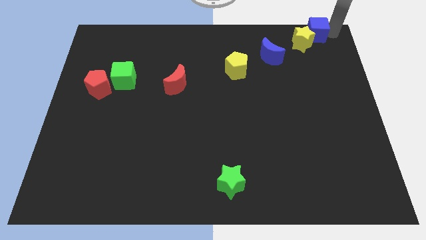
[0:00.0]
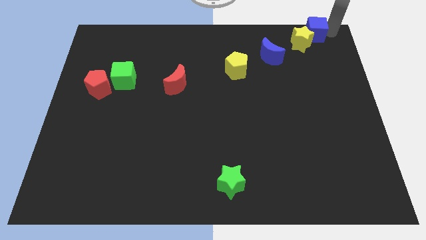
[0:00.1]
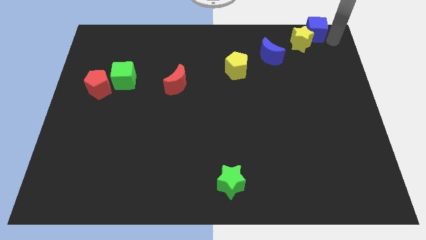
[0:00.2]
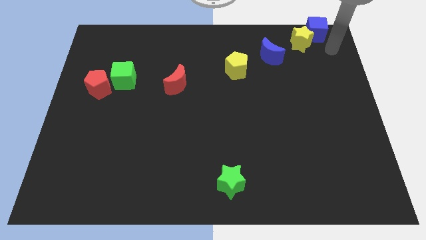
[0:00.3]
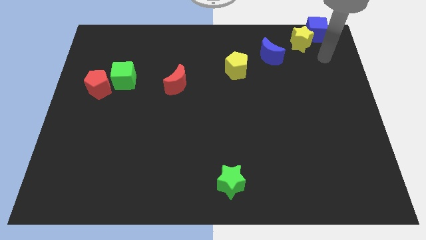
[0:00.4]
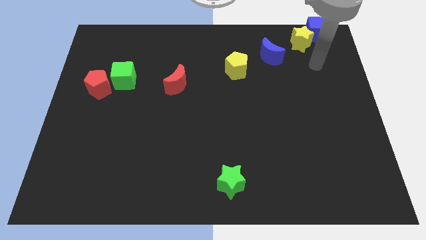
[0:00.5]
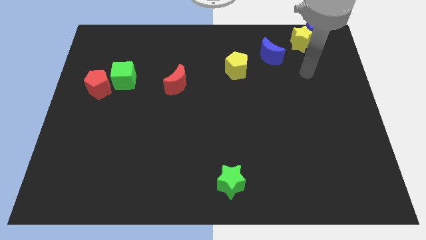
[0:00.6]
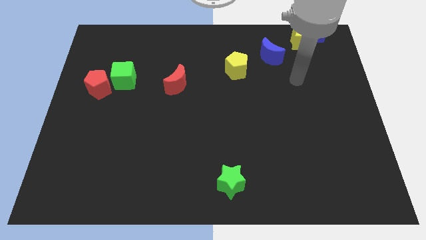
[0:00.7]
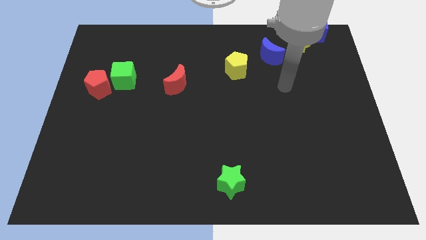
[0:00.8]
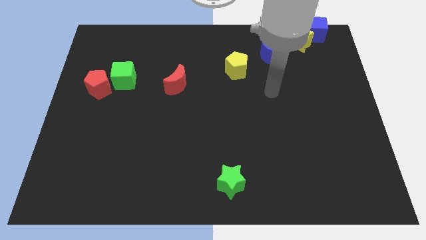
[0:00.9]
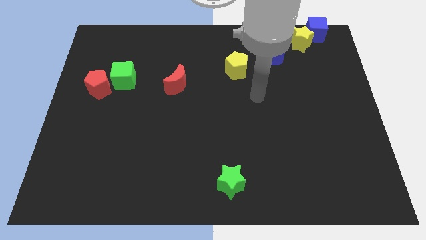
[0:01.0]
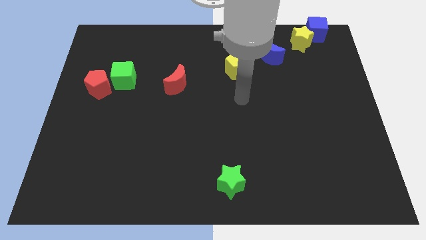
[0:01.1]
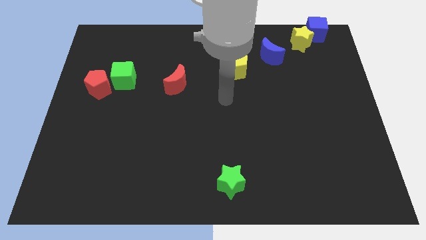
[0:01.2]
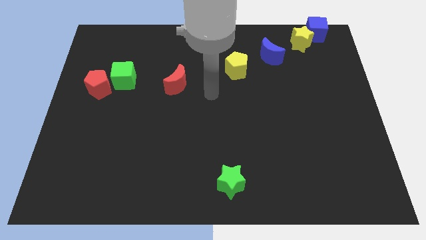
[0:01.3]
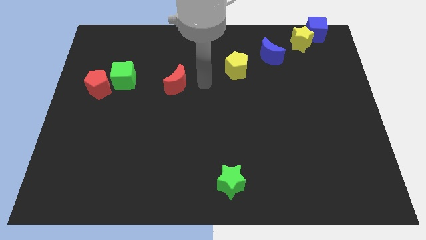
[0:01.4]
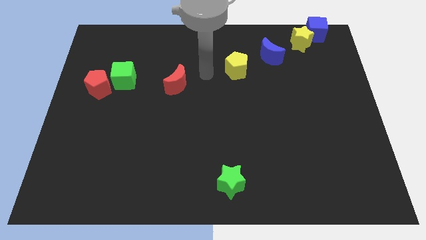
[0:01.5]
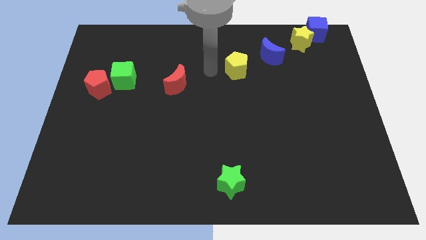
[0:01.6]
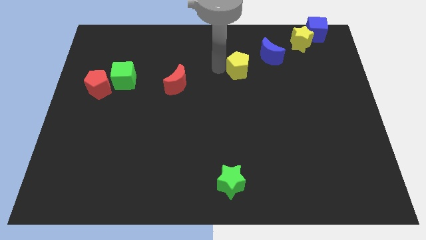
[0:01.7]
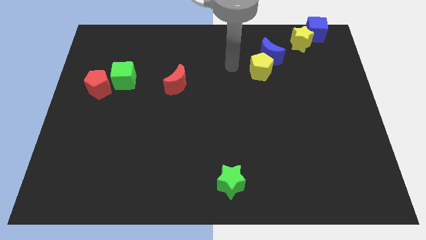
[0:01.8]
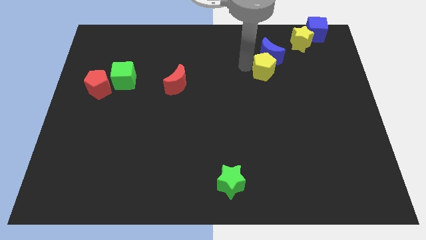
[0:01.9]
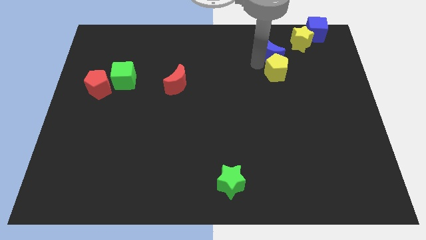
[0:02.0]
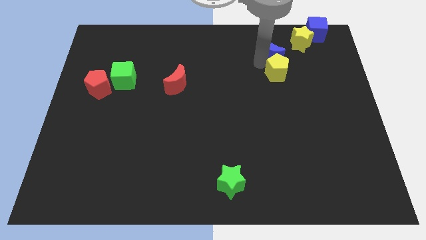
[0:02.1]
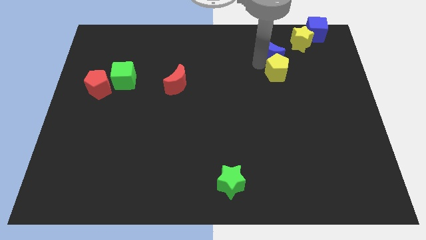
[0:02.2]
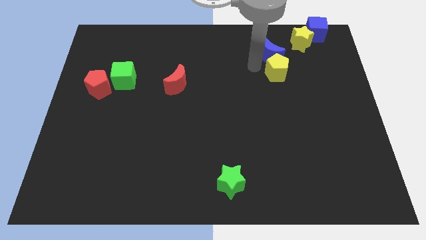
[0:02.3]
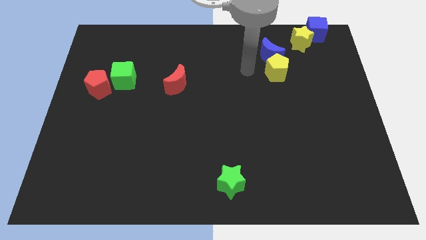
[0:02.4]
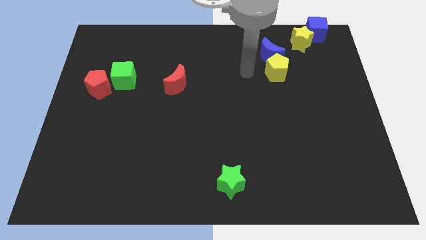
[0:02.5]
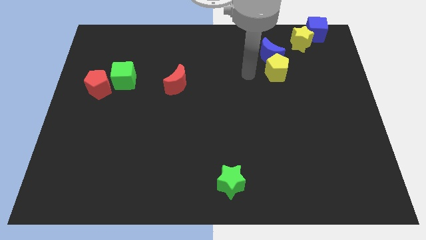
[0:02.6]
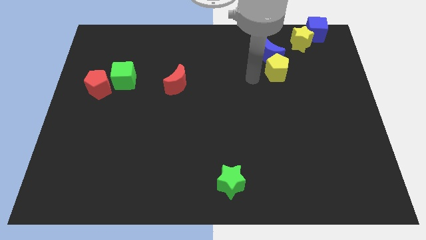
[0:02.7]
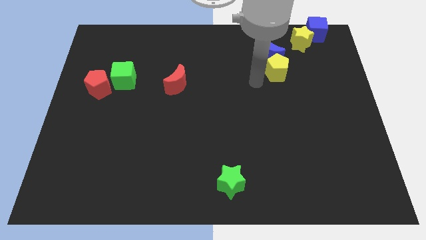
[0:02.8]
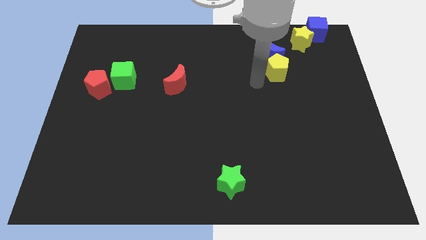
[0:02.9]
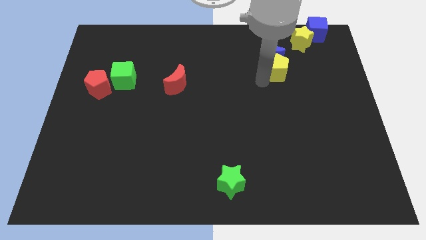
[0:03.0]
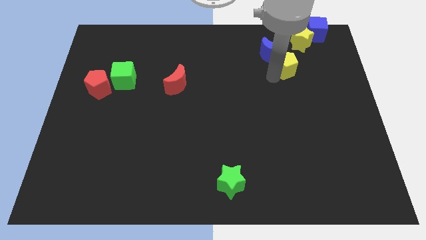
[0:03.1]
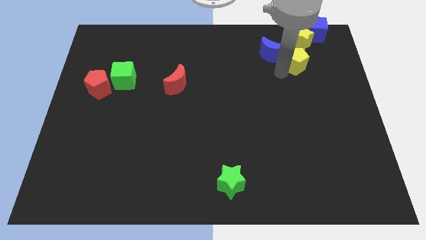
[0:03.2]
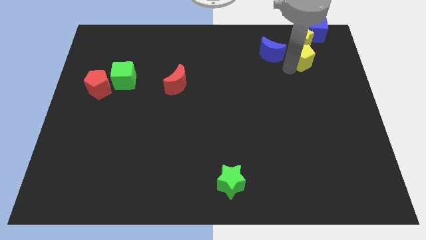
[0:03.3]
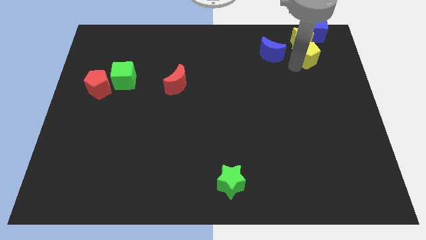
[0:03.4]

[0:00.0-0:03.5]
push yellow pentagon below yellow star

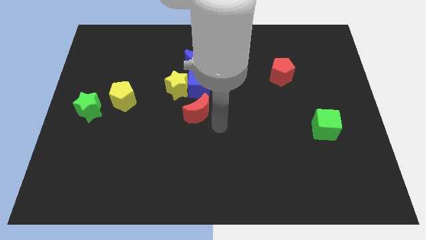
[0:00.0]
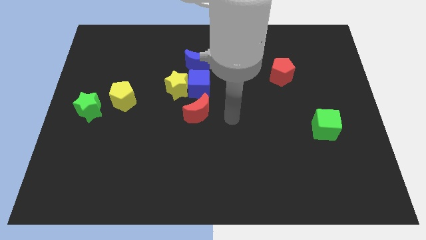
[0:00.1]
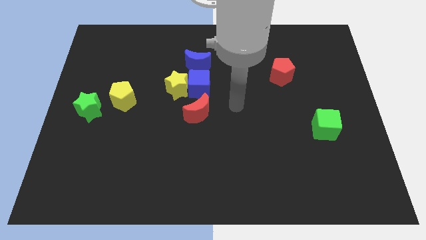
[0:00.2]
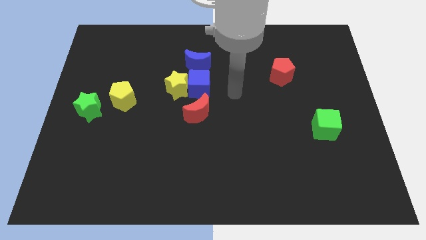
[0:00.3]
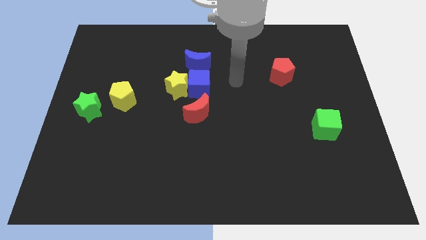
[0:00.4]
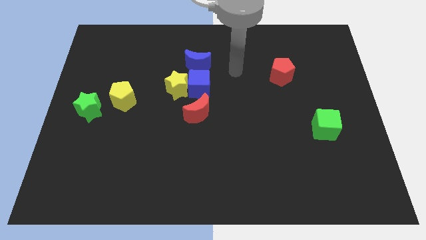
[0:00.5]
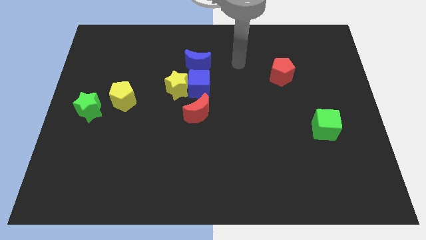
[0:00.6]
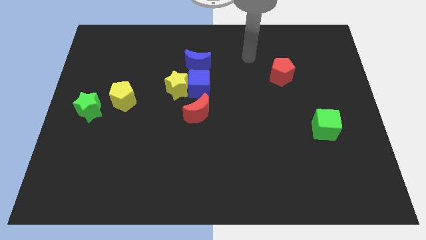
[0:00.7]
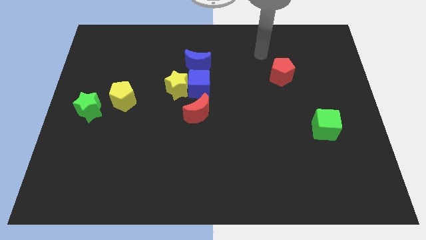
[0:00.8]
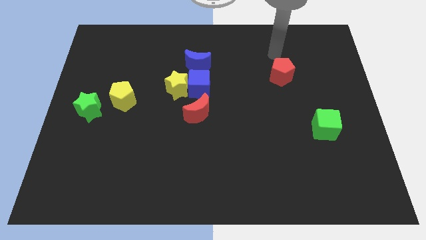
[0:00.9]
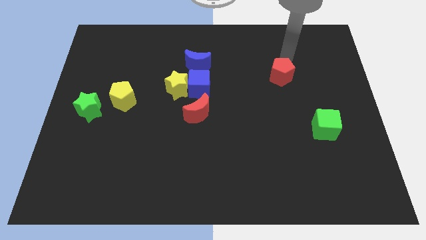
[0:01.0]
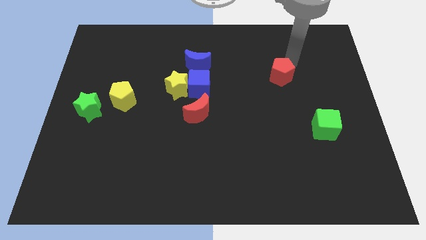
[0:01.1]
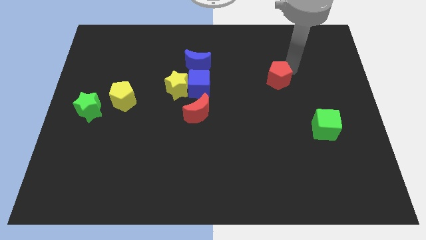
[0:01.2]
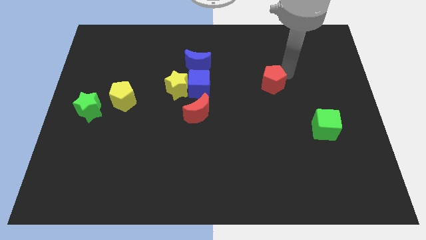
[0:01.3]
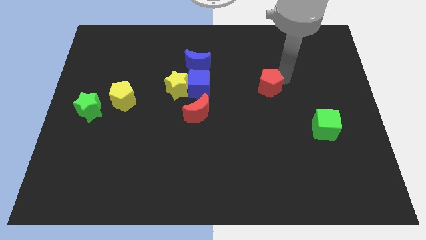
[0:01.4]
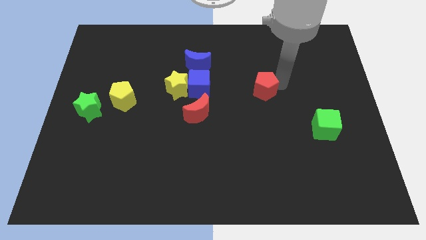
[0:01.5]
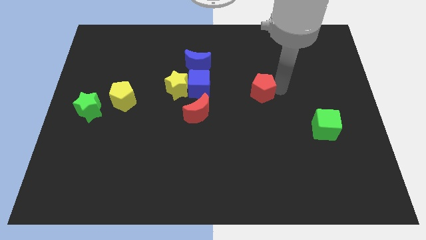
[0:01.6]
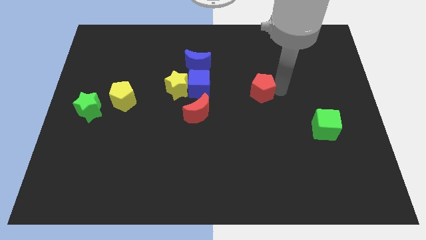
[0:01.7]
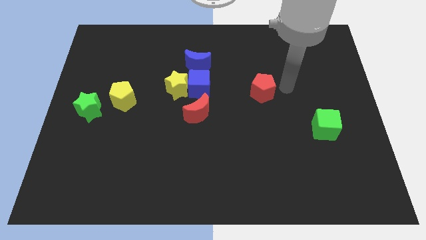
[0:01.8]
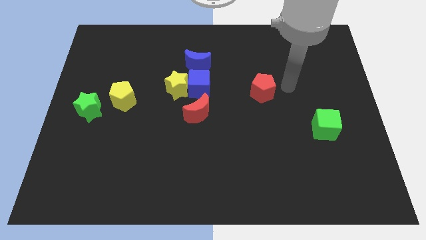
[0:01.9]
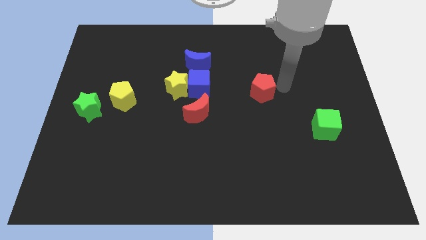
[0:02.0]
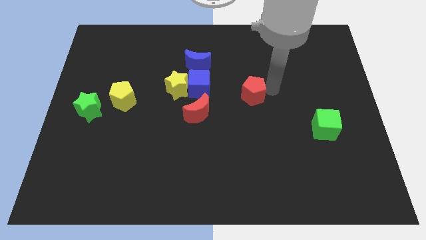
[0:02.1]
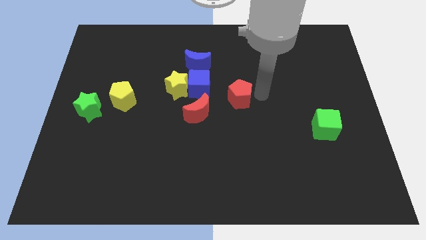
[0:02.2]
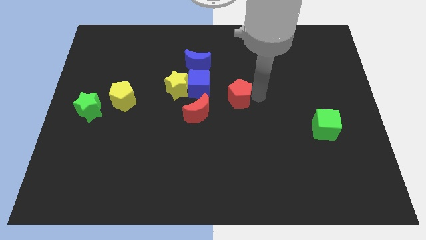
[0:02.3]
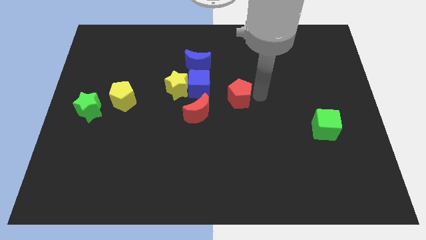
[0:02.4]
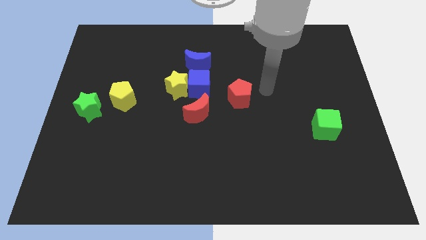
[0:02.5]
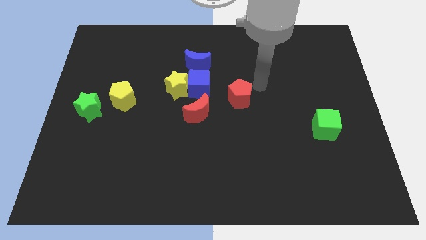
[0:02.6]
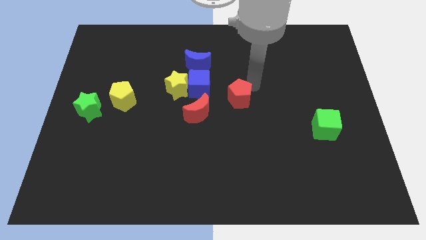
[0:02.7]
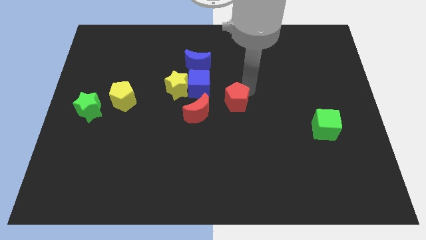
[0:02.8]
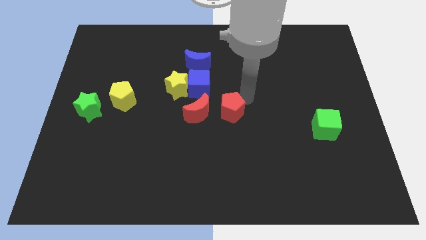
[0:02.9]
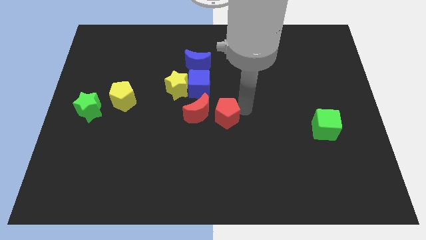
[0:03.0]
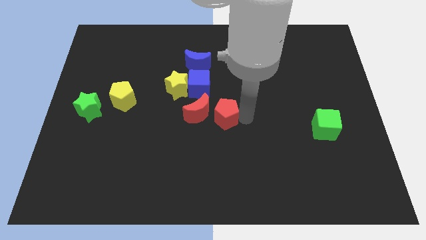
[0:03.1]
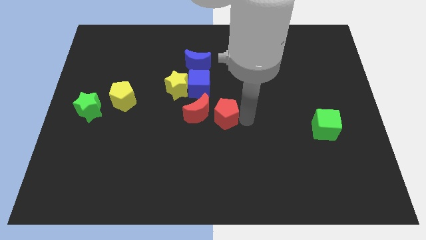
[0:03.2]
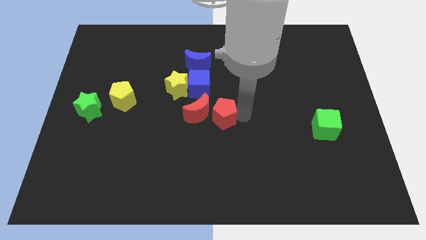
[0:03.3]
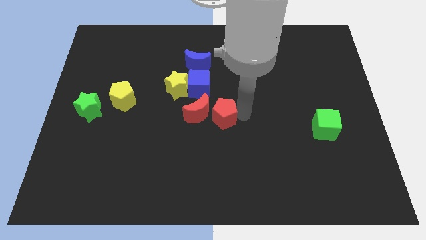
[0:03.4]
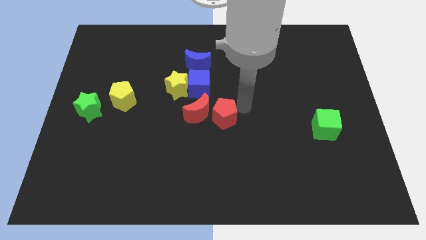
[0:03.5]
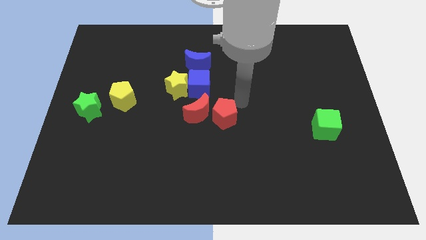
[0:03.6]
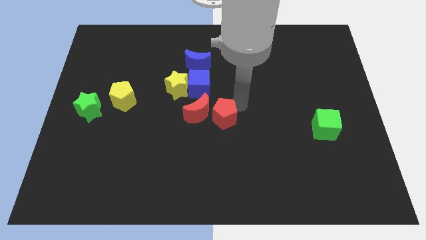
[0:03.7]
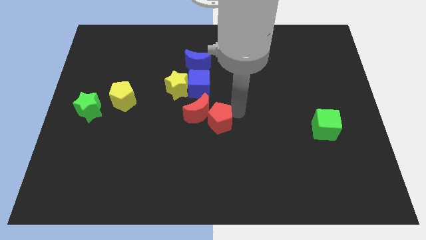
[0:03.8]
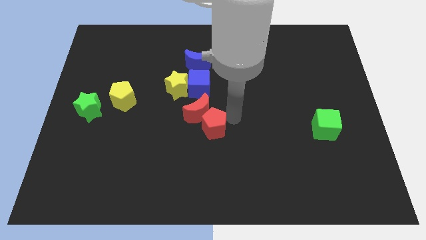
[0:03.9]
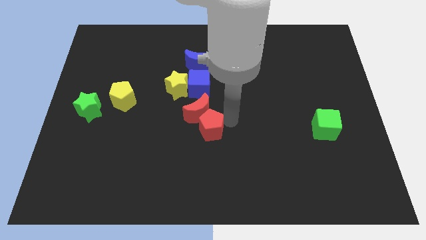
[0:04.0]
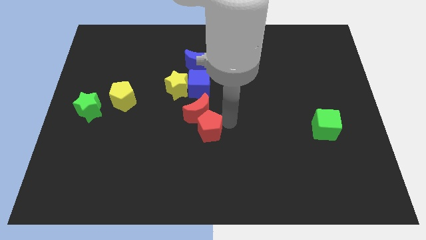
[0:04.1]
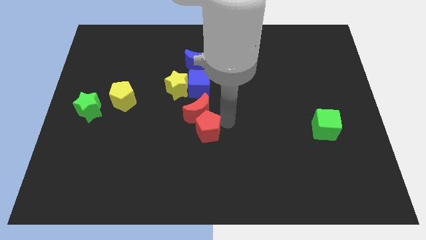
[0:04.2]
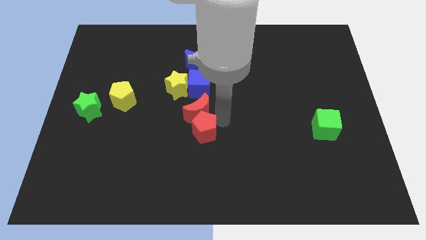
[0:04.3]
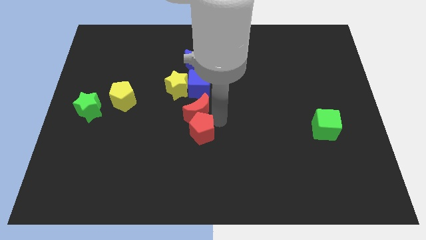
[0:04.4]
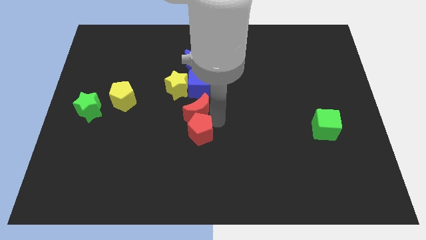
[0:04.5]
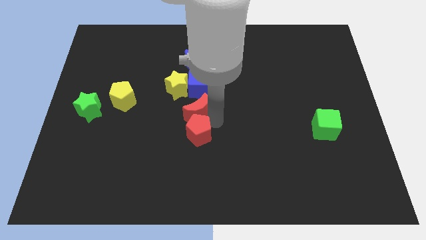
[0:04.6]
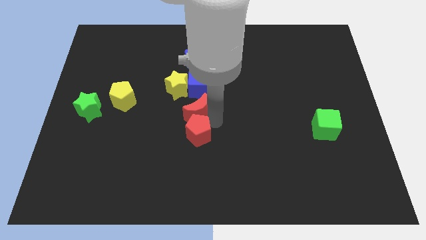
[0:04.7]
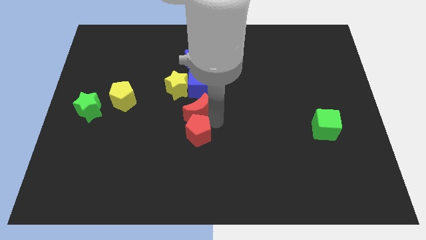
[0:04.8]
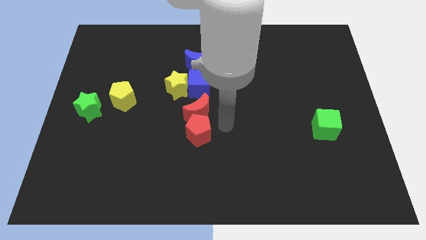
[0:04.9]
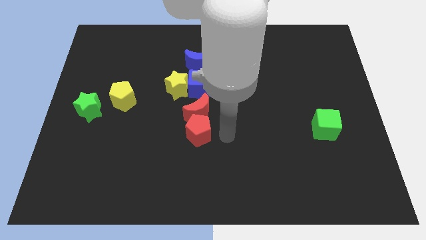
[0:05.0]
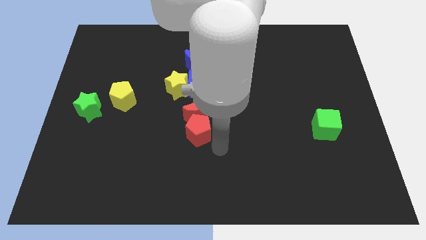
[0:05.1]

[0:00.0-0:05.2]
place the red pentagon below the red crescent

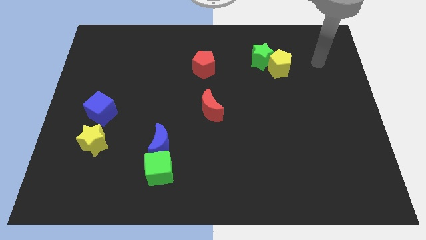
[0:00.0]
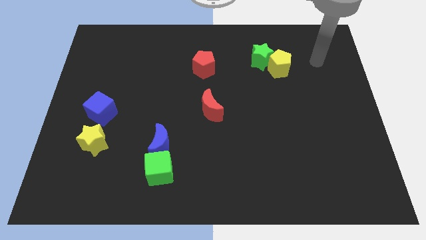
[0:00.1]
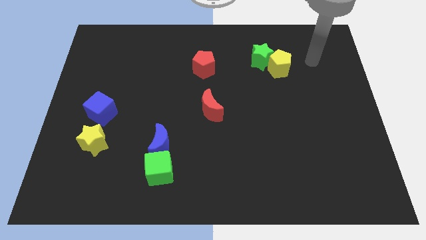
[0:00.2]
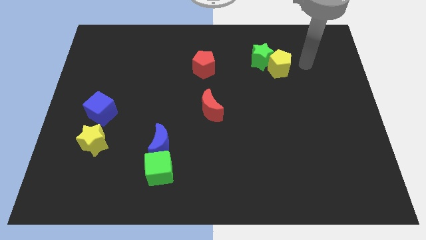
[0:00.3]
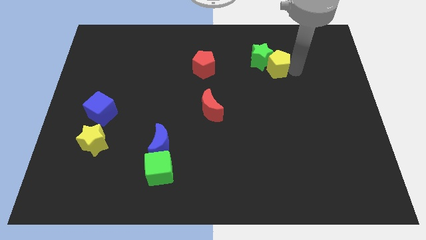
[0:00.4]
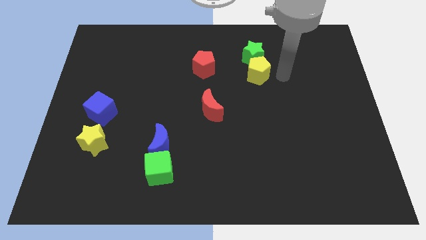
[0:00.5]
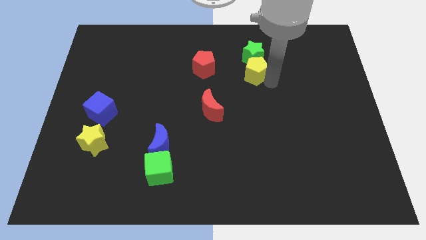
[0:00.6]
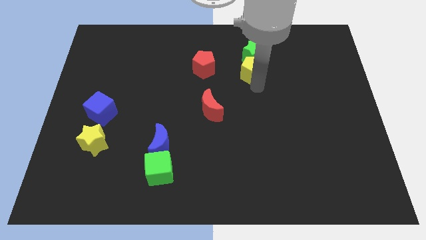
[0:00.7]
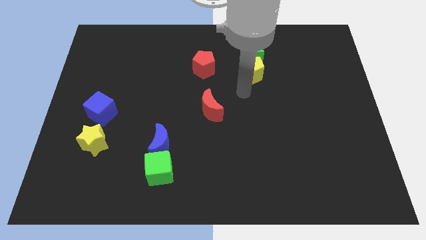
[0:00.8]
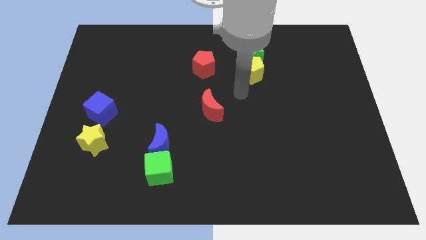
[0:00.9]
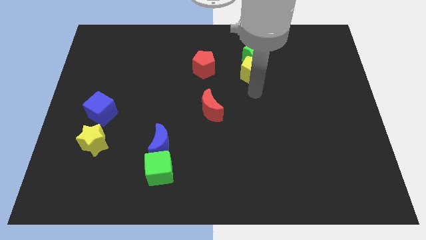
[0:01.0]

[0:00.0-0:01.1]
push the yellow pentagon downwards slightly
